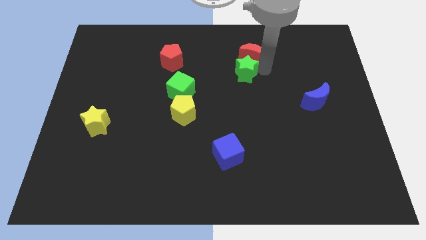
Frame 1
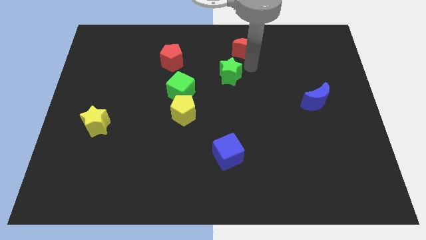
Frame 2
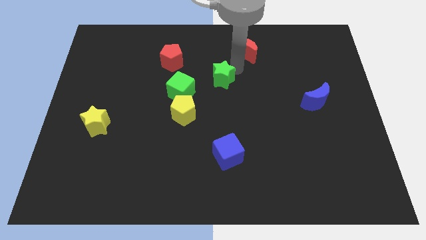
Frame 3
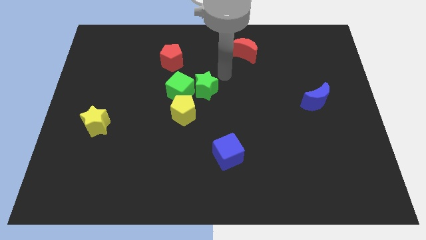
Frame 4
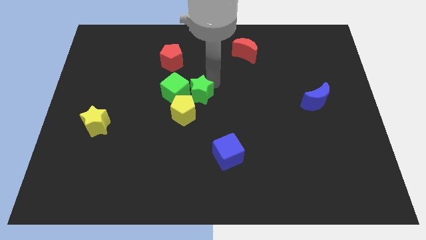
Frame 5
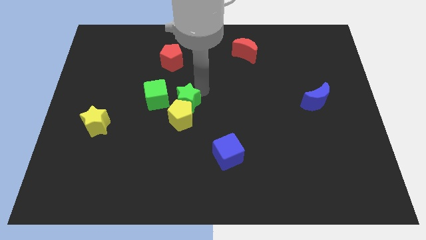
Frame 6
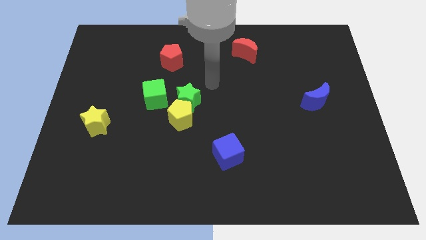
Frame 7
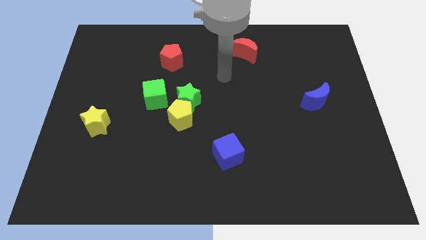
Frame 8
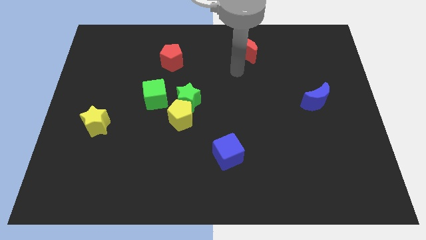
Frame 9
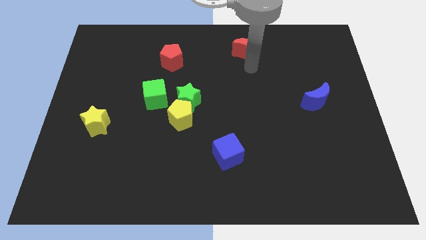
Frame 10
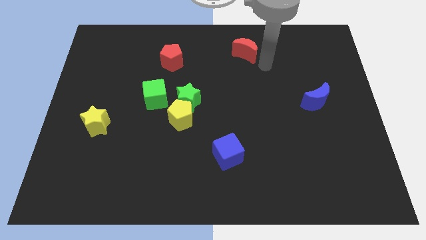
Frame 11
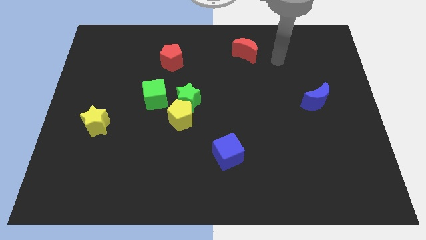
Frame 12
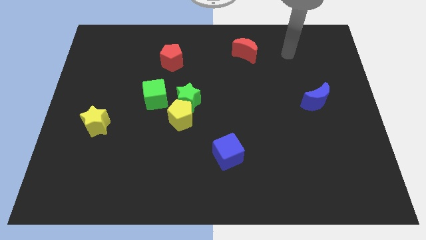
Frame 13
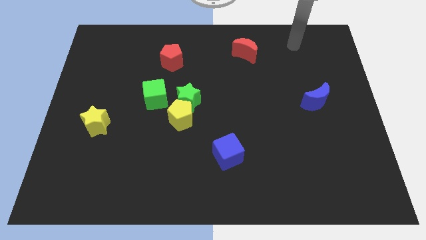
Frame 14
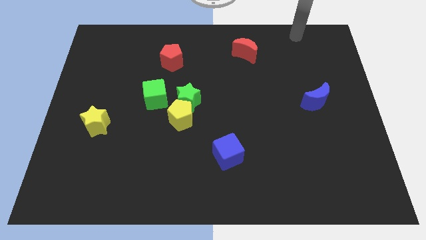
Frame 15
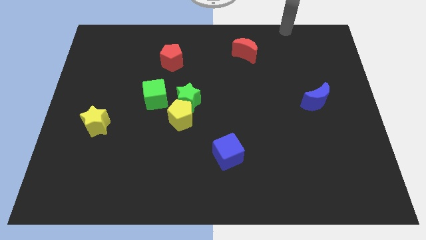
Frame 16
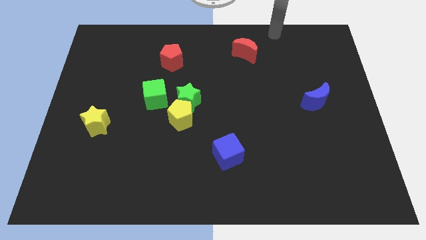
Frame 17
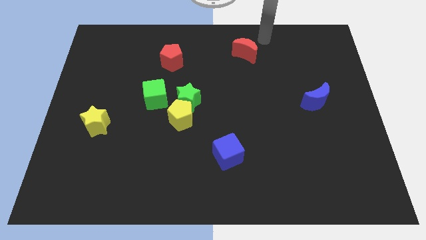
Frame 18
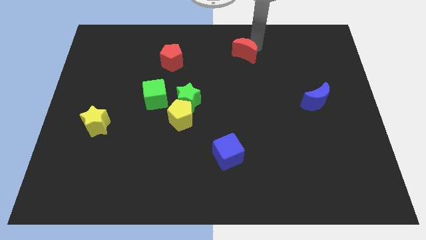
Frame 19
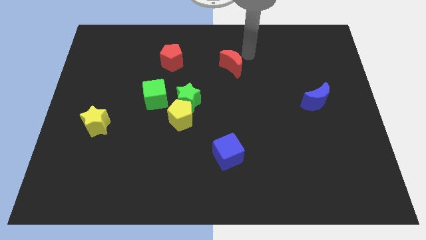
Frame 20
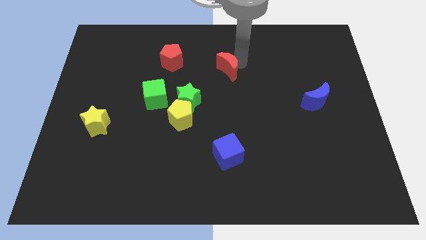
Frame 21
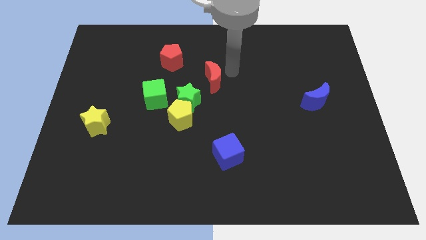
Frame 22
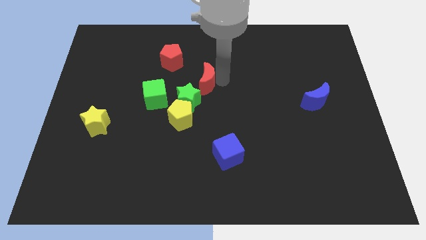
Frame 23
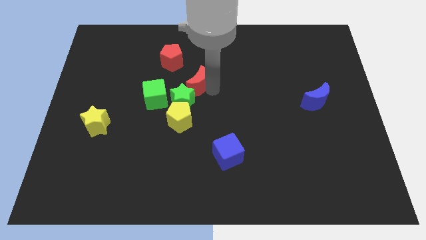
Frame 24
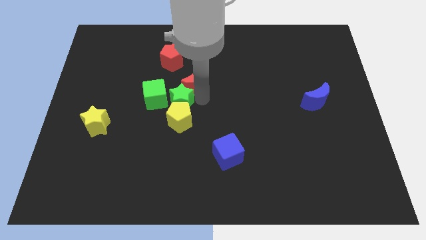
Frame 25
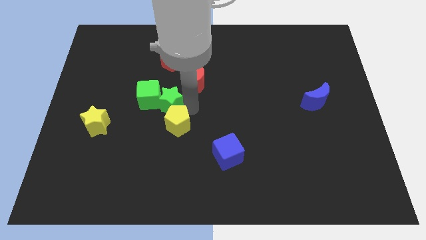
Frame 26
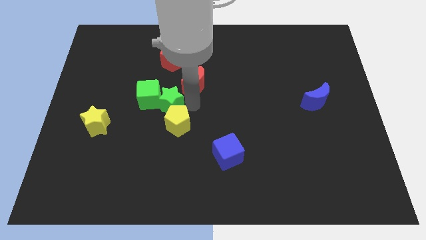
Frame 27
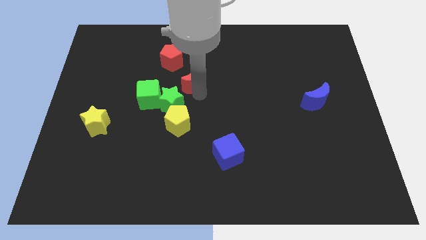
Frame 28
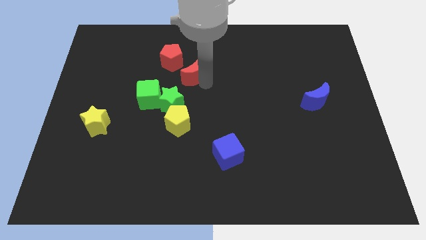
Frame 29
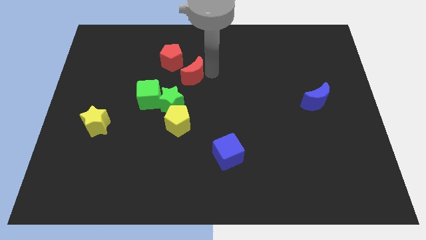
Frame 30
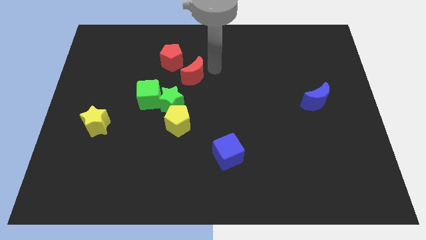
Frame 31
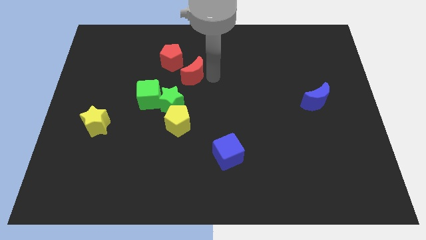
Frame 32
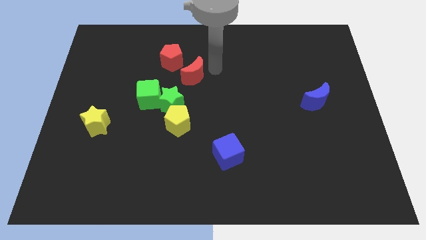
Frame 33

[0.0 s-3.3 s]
join green star with green cube and red crescent with red pentagon

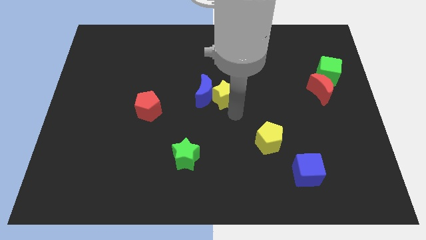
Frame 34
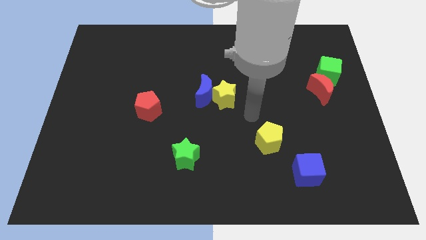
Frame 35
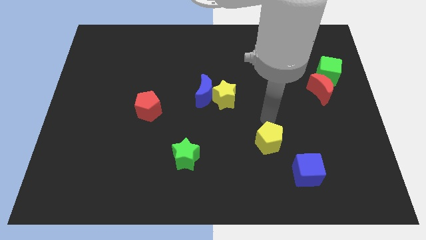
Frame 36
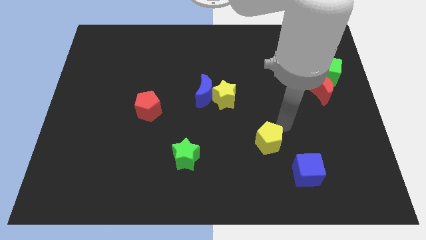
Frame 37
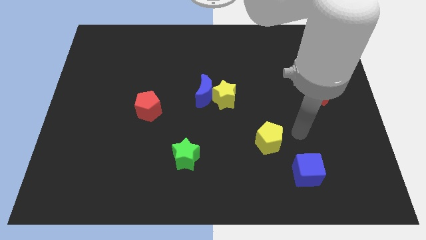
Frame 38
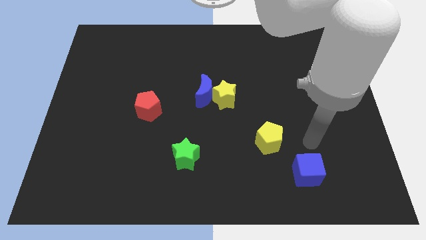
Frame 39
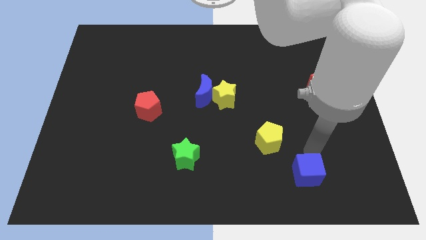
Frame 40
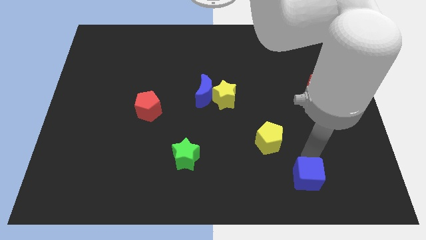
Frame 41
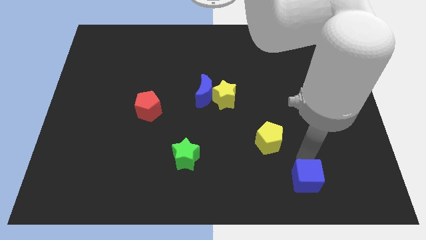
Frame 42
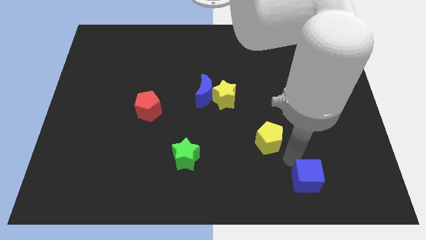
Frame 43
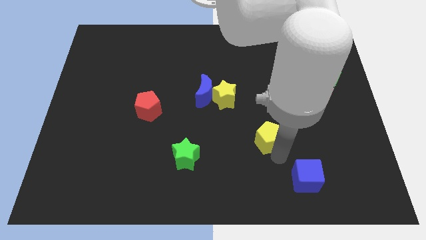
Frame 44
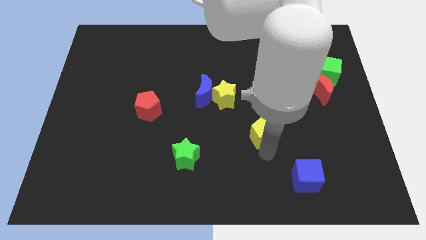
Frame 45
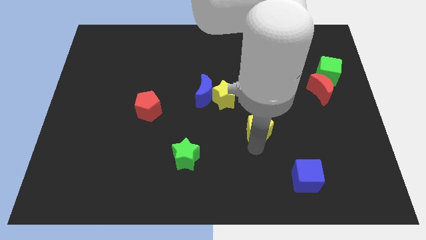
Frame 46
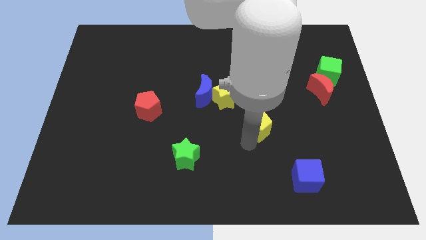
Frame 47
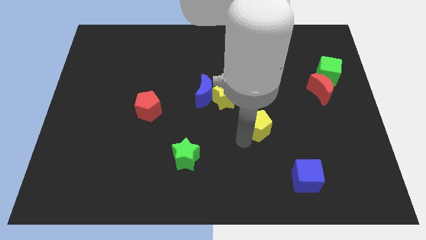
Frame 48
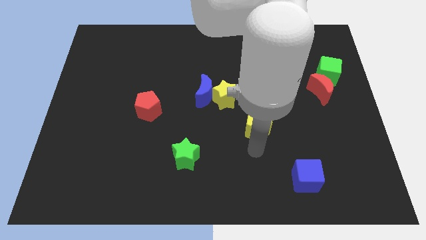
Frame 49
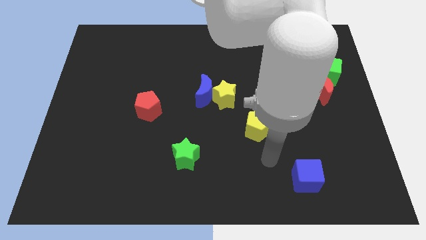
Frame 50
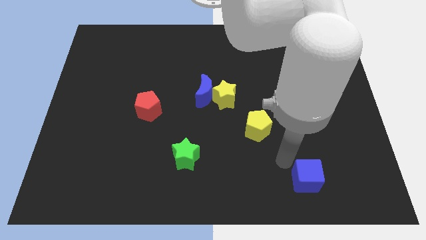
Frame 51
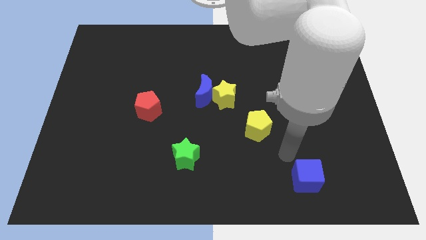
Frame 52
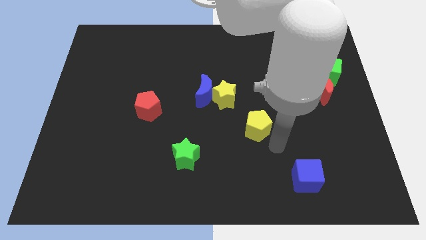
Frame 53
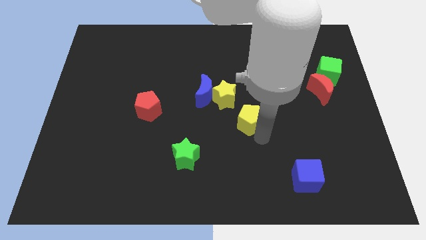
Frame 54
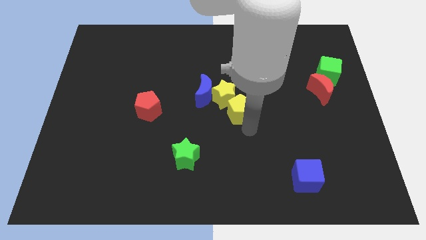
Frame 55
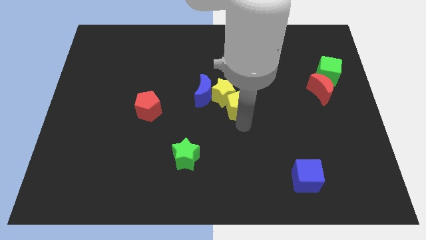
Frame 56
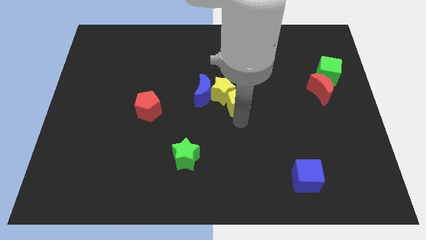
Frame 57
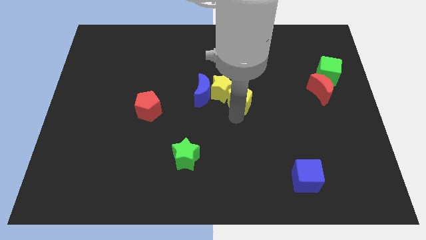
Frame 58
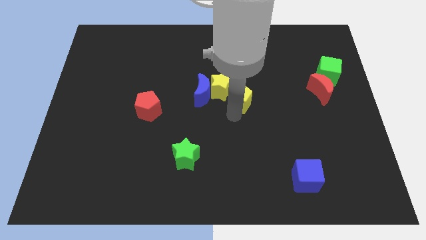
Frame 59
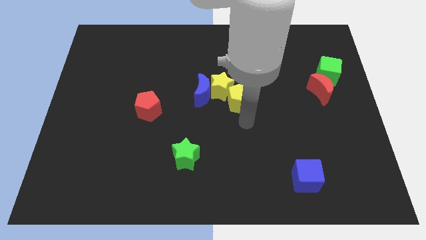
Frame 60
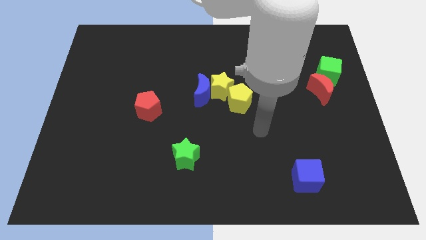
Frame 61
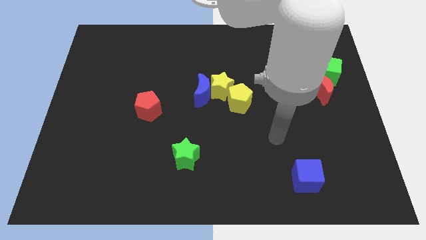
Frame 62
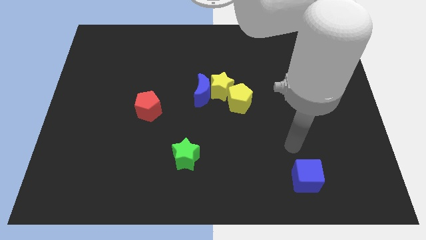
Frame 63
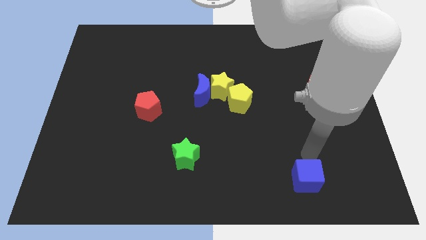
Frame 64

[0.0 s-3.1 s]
push the yellow pentagon diagonally into the yellow star from the bottom right

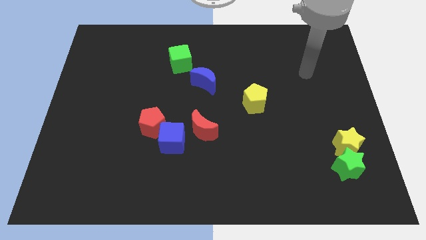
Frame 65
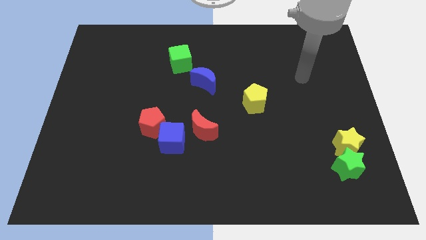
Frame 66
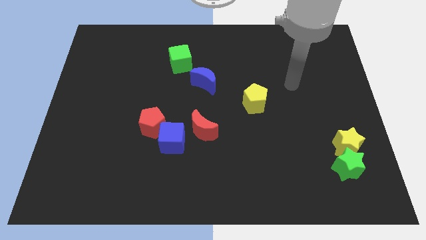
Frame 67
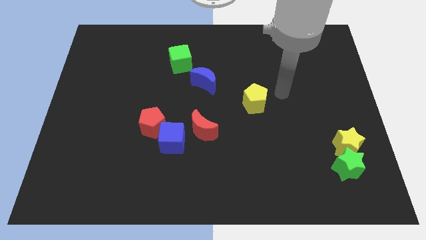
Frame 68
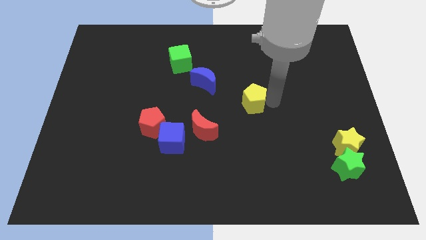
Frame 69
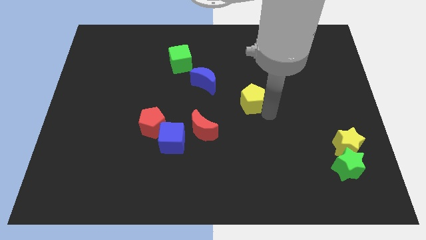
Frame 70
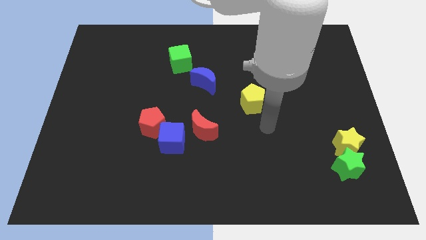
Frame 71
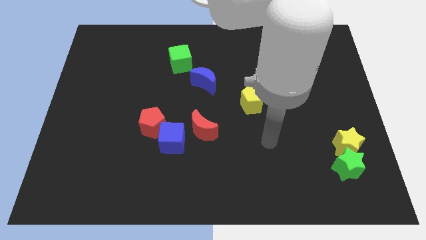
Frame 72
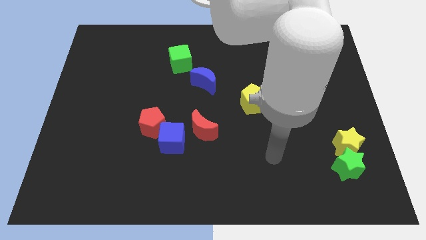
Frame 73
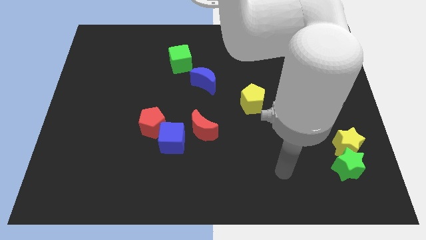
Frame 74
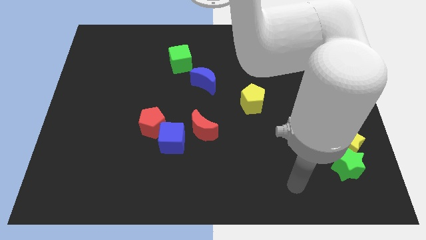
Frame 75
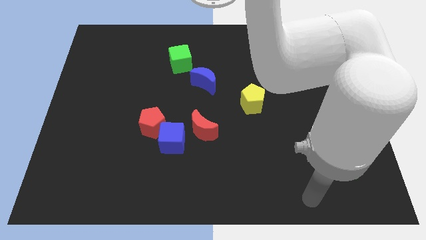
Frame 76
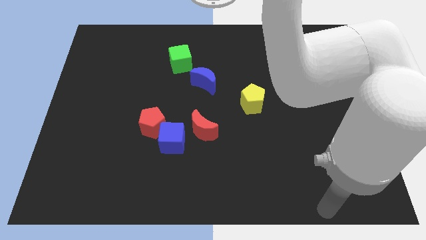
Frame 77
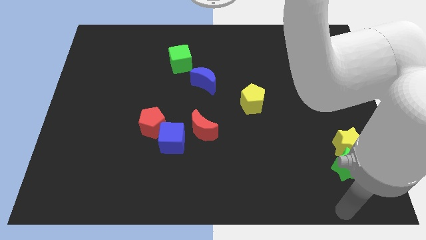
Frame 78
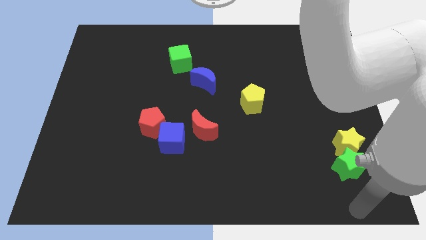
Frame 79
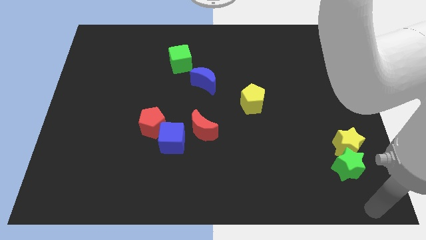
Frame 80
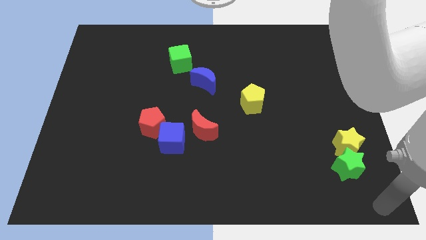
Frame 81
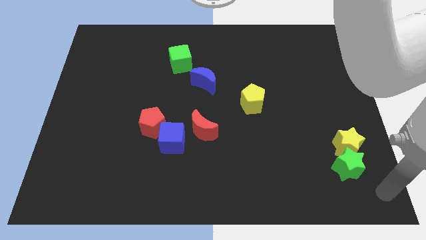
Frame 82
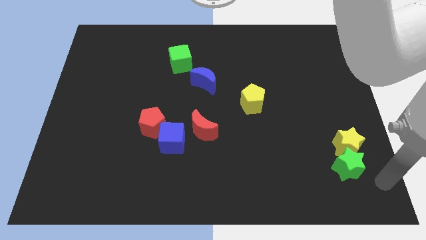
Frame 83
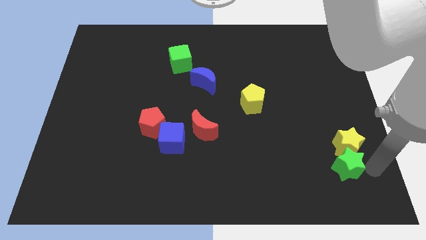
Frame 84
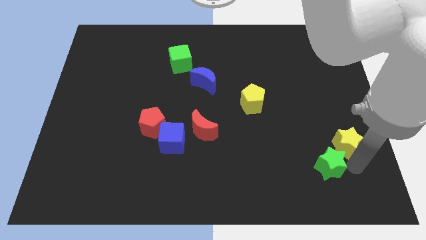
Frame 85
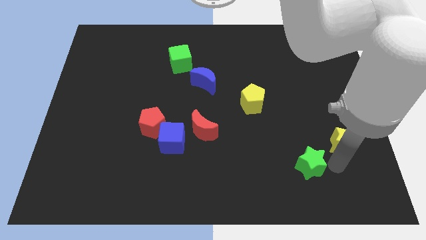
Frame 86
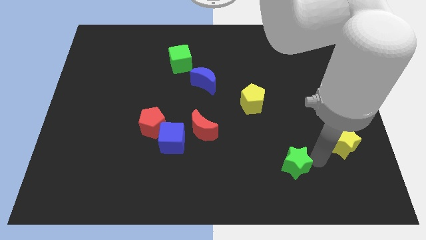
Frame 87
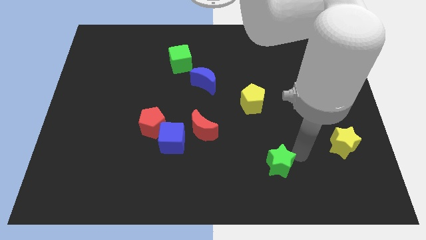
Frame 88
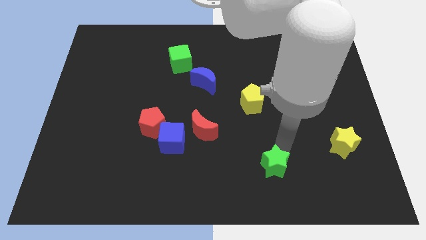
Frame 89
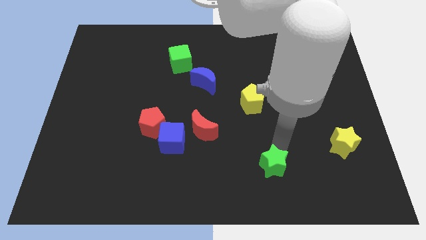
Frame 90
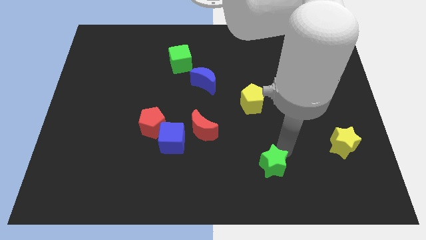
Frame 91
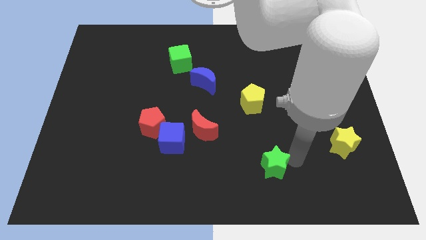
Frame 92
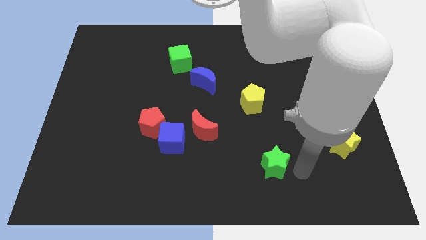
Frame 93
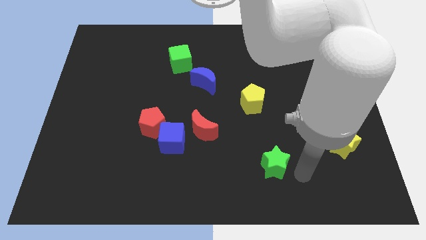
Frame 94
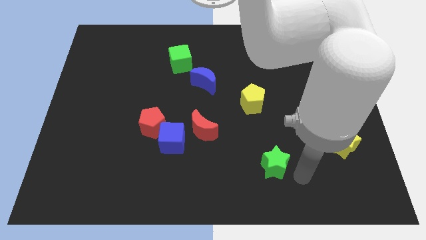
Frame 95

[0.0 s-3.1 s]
move green star towards the bottom center of the board
